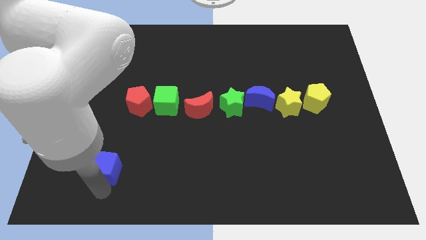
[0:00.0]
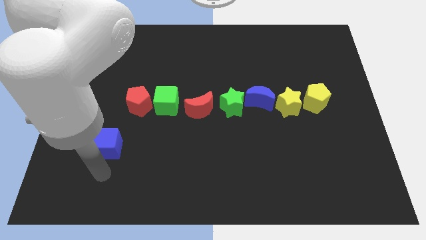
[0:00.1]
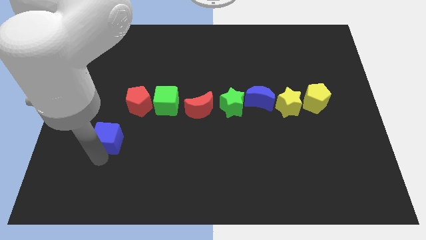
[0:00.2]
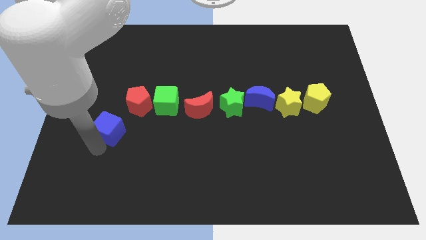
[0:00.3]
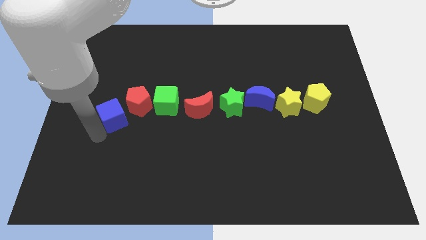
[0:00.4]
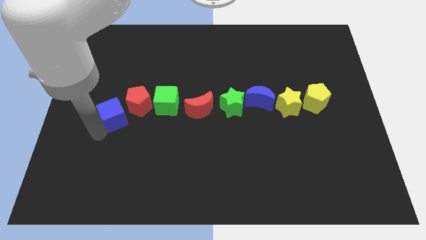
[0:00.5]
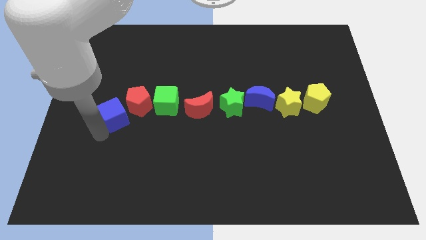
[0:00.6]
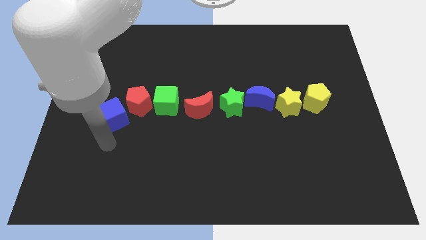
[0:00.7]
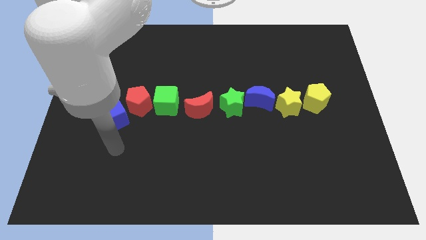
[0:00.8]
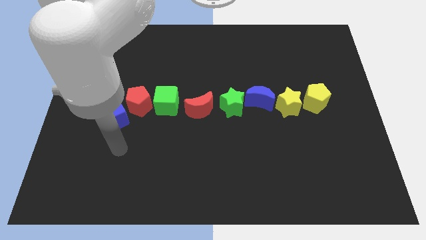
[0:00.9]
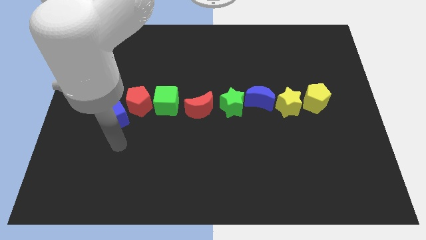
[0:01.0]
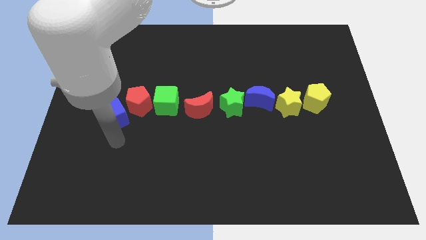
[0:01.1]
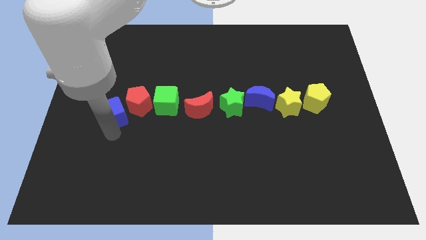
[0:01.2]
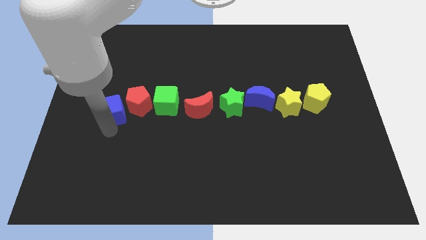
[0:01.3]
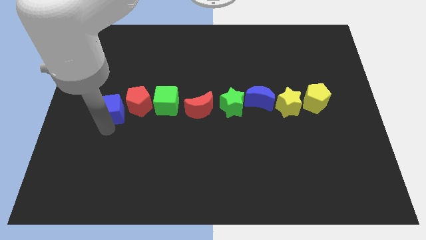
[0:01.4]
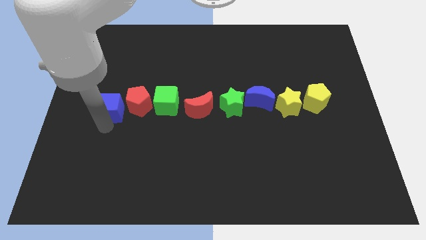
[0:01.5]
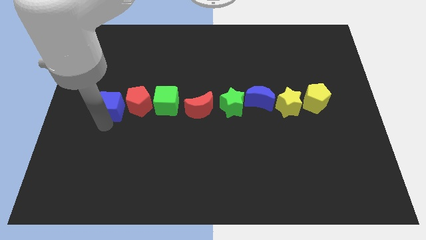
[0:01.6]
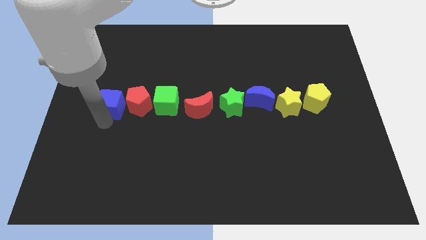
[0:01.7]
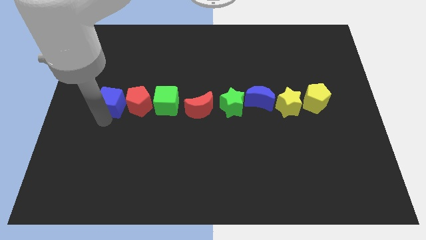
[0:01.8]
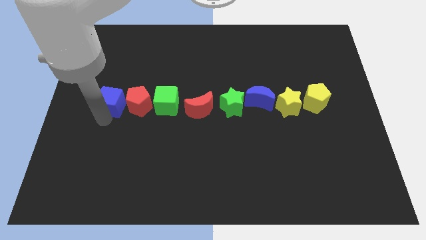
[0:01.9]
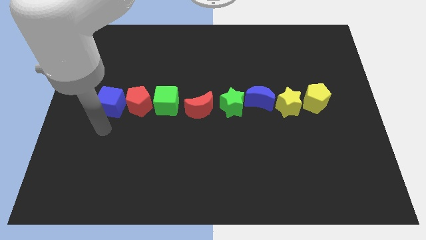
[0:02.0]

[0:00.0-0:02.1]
push the blue cube left to the red pentagon

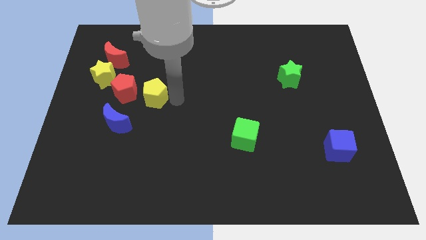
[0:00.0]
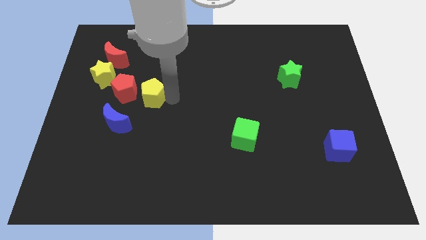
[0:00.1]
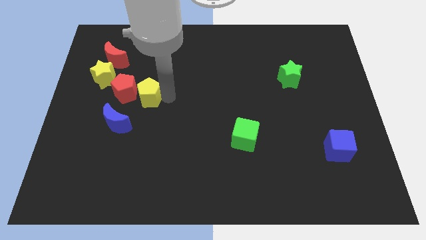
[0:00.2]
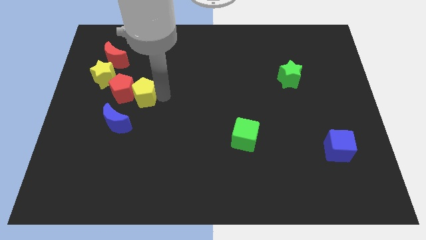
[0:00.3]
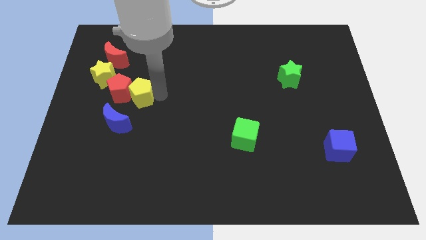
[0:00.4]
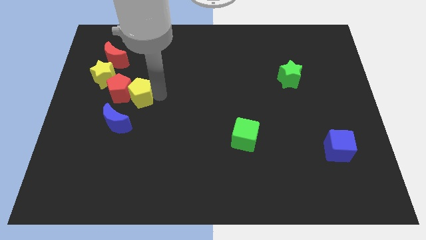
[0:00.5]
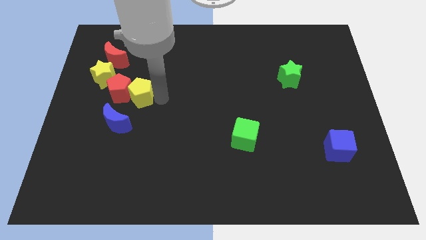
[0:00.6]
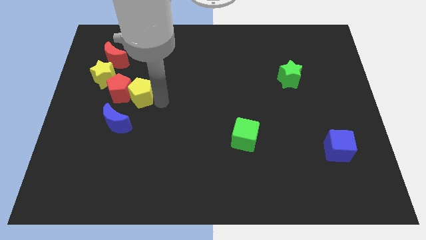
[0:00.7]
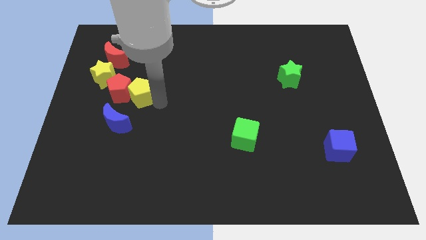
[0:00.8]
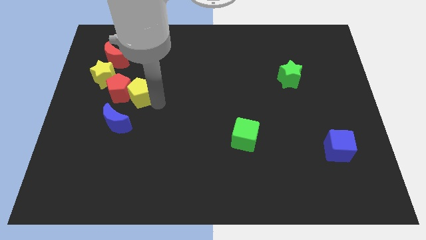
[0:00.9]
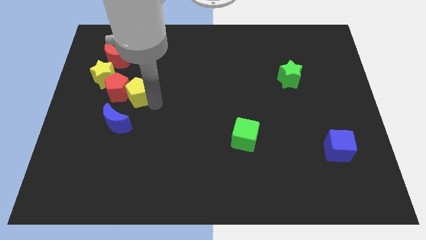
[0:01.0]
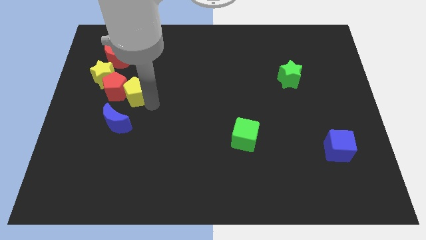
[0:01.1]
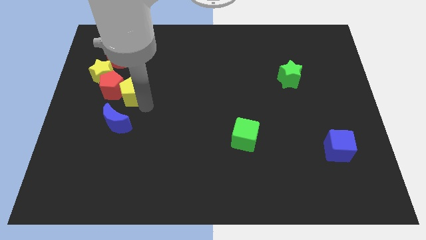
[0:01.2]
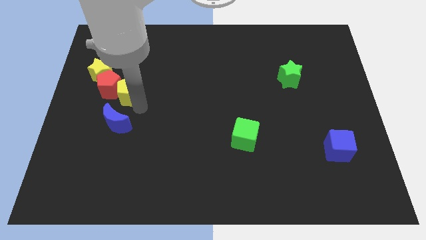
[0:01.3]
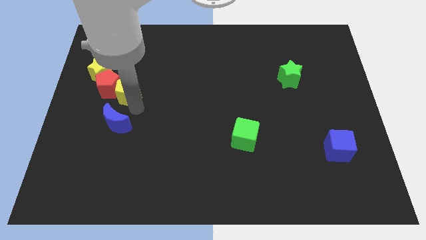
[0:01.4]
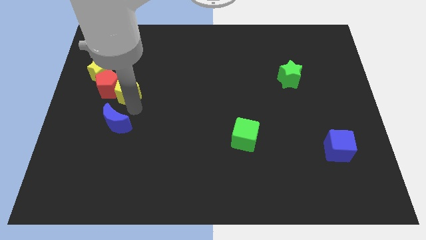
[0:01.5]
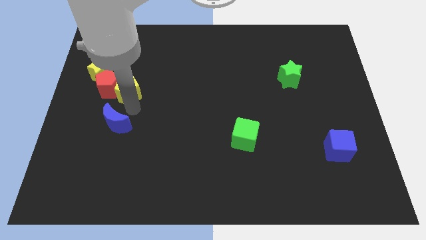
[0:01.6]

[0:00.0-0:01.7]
push a group of blocks slightly to the left side of the board

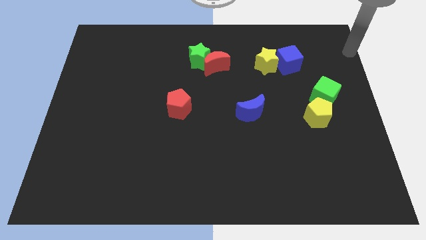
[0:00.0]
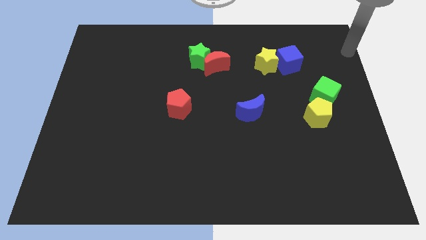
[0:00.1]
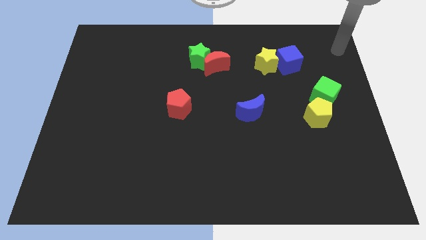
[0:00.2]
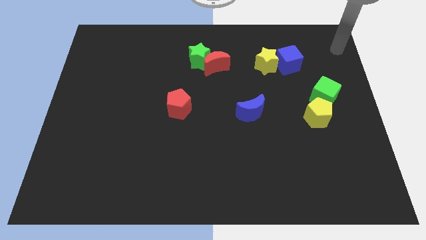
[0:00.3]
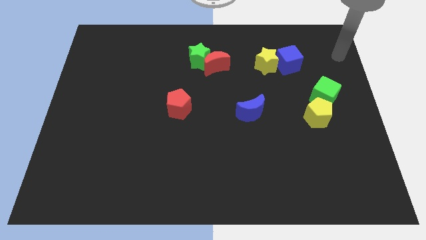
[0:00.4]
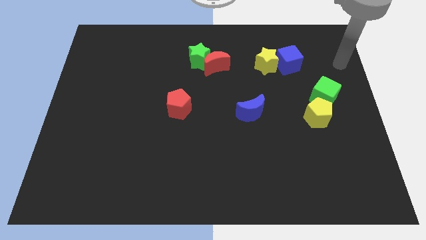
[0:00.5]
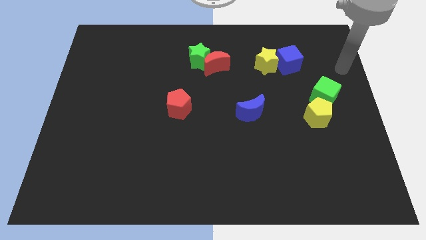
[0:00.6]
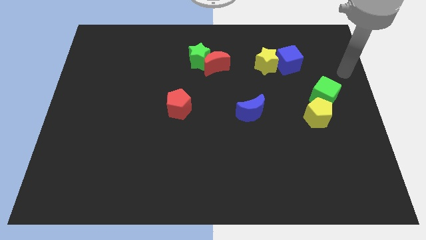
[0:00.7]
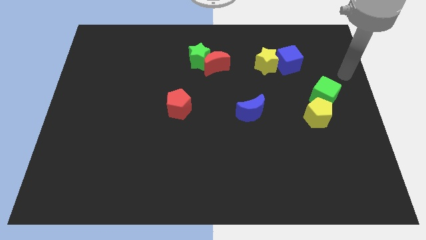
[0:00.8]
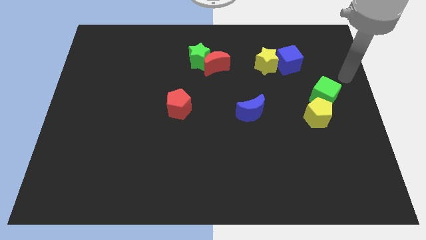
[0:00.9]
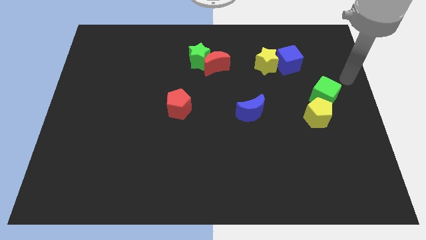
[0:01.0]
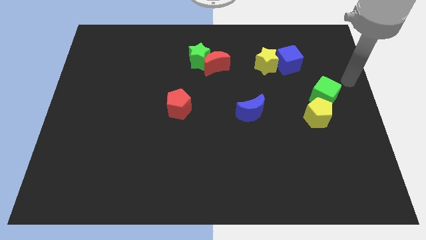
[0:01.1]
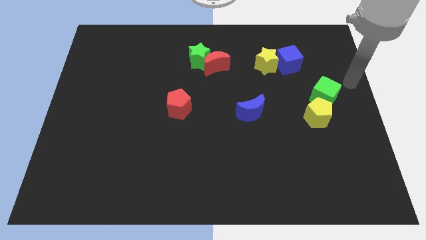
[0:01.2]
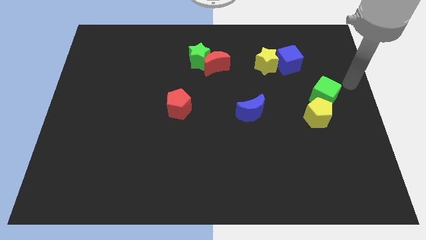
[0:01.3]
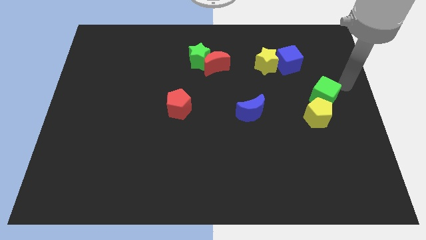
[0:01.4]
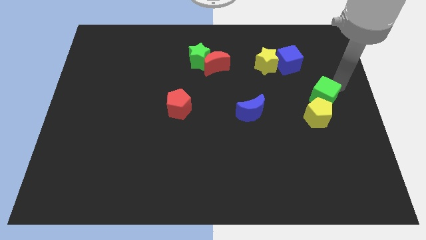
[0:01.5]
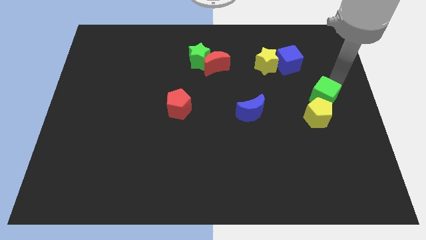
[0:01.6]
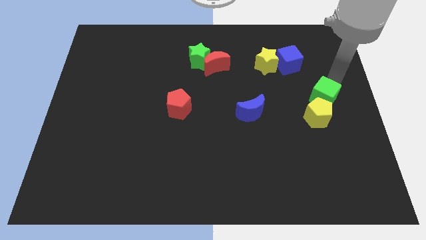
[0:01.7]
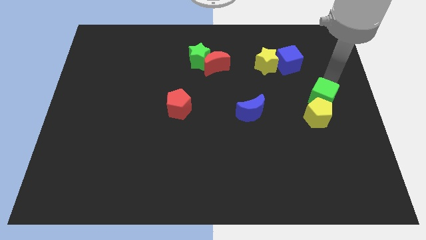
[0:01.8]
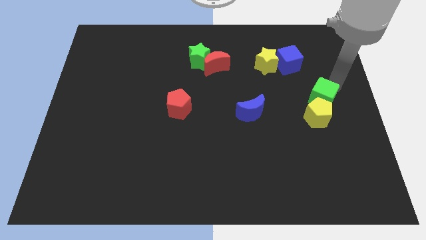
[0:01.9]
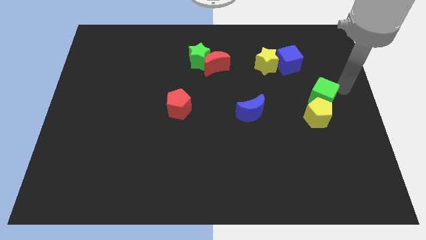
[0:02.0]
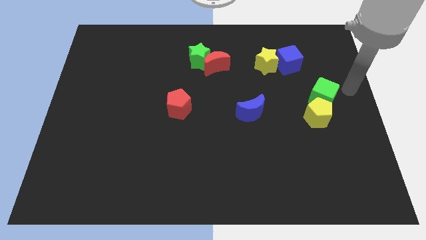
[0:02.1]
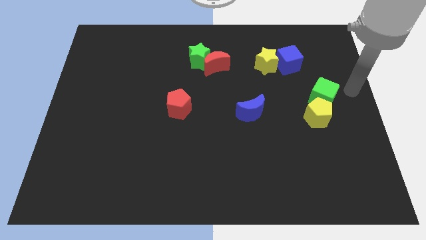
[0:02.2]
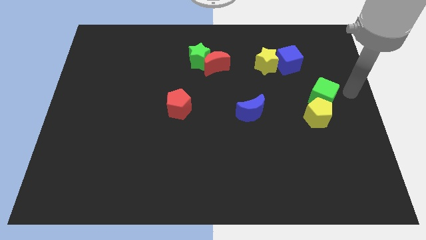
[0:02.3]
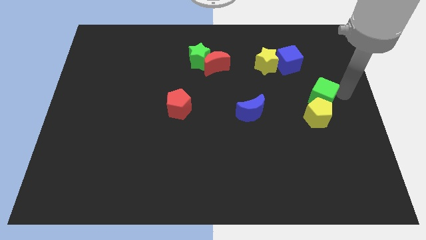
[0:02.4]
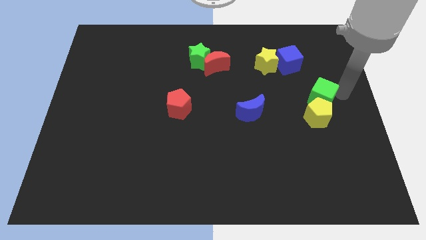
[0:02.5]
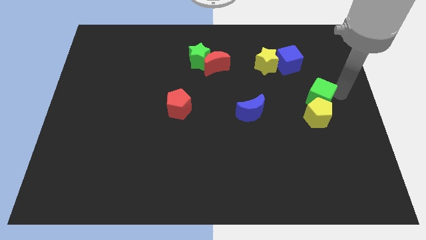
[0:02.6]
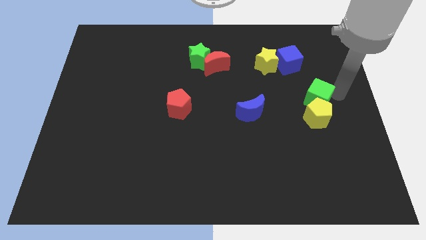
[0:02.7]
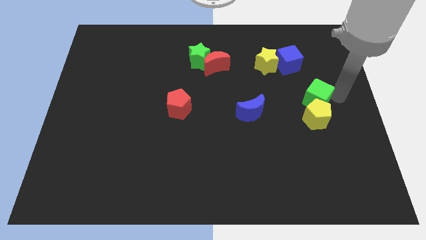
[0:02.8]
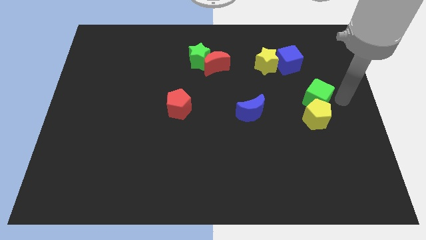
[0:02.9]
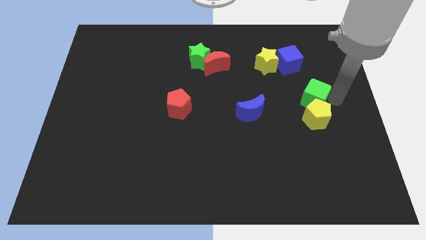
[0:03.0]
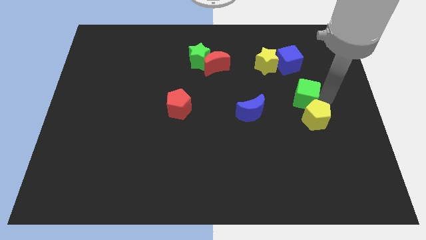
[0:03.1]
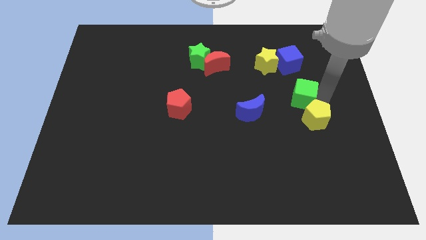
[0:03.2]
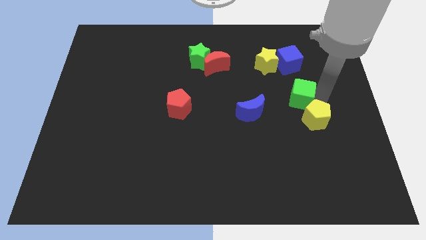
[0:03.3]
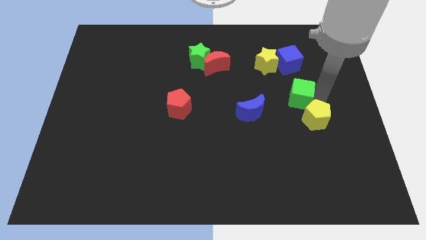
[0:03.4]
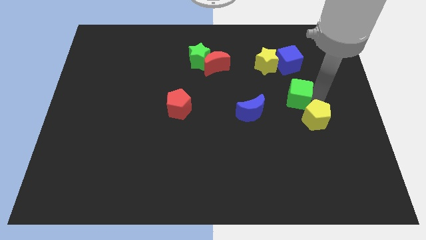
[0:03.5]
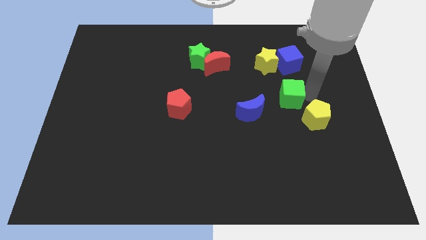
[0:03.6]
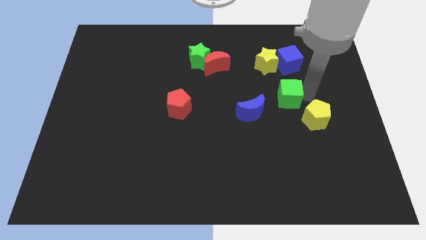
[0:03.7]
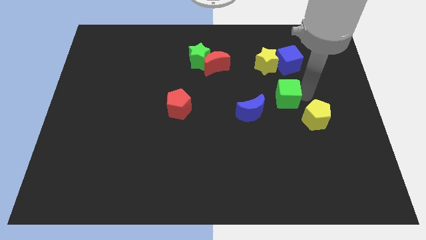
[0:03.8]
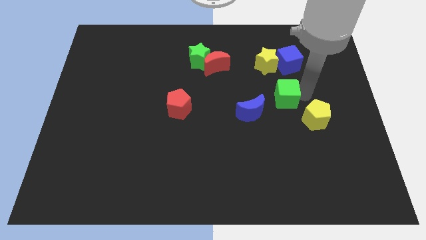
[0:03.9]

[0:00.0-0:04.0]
place the green cube below the blue cube

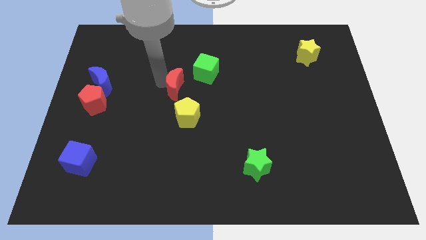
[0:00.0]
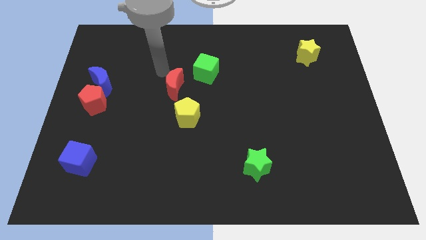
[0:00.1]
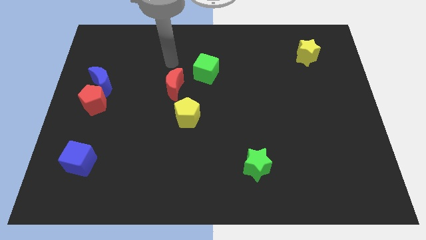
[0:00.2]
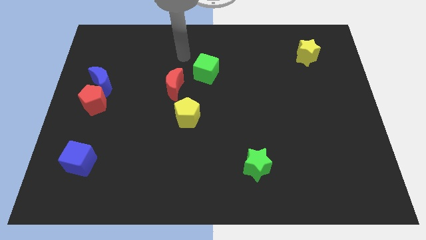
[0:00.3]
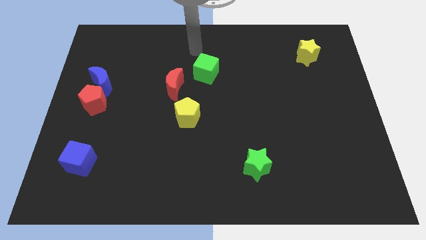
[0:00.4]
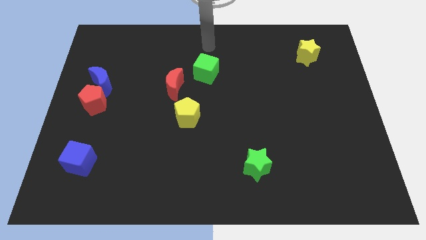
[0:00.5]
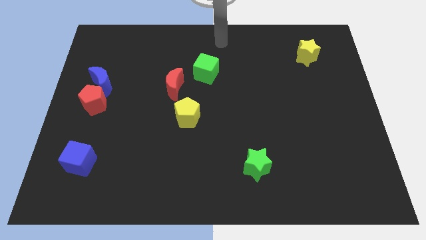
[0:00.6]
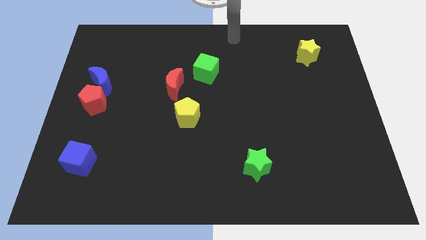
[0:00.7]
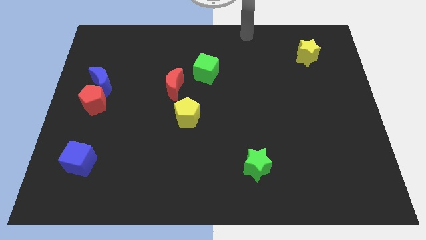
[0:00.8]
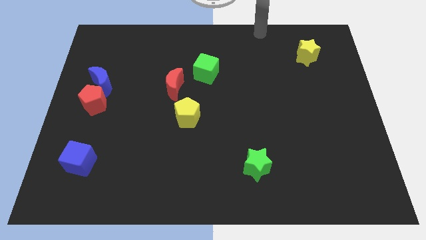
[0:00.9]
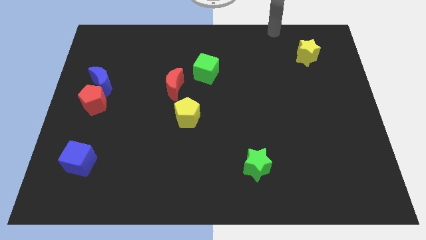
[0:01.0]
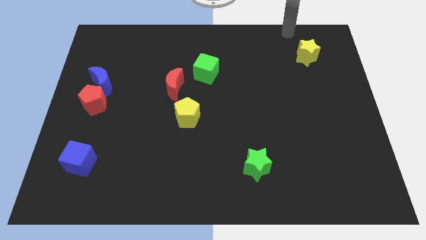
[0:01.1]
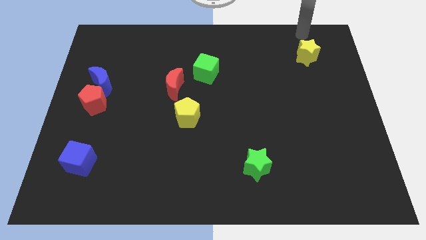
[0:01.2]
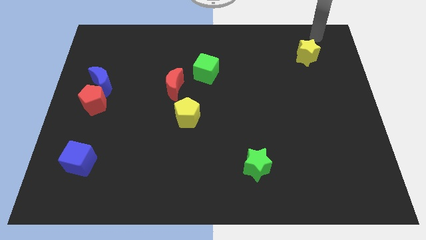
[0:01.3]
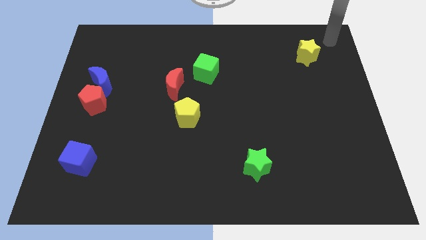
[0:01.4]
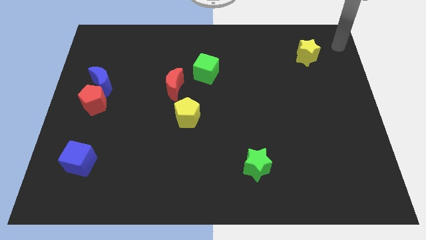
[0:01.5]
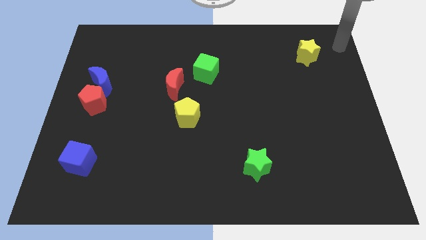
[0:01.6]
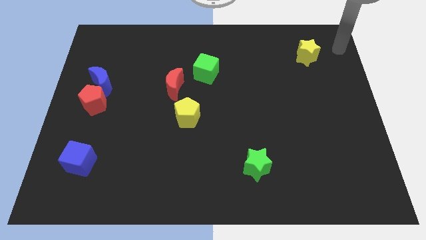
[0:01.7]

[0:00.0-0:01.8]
move the arm away from the red moon
